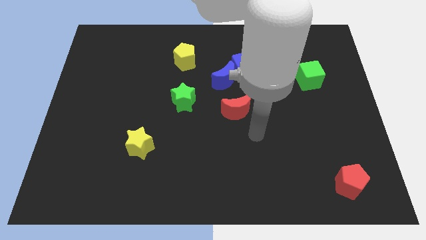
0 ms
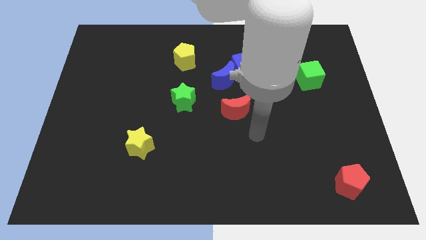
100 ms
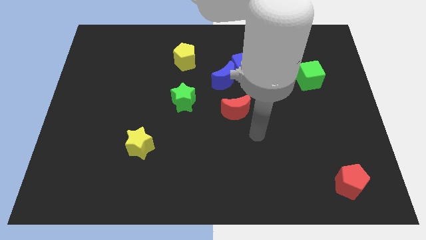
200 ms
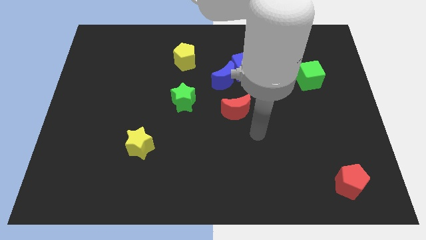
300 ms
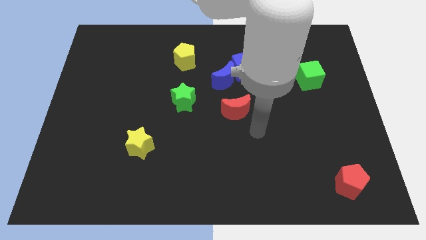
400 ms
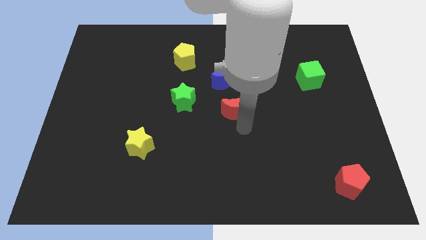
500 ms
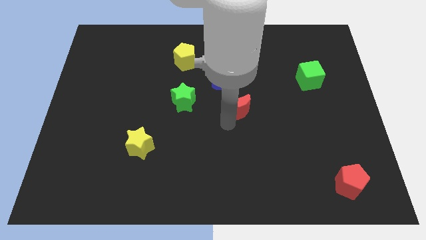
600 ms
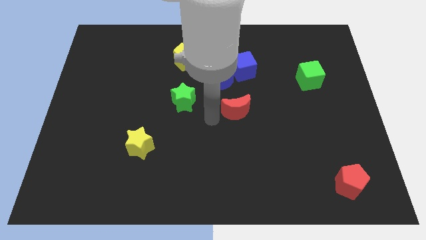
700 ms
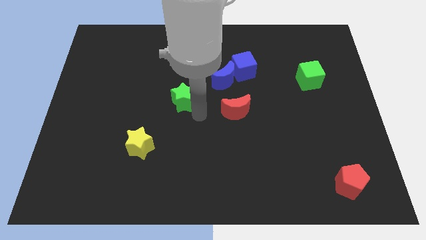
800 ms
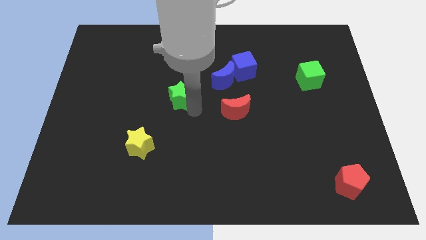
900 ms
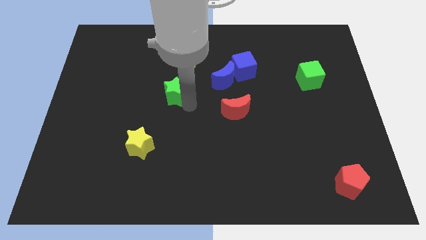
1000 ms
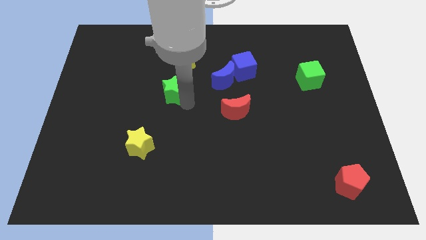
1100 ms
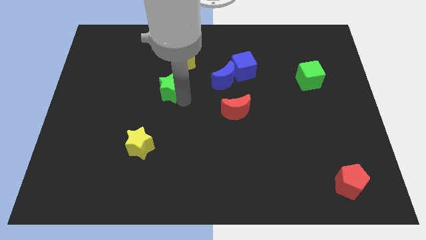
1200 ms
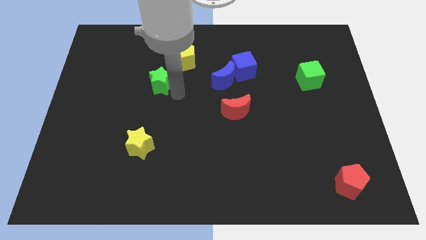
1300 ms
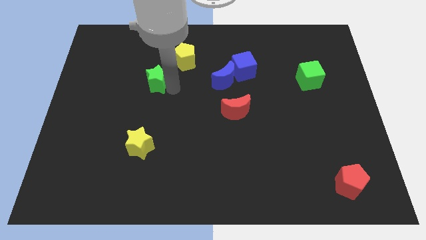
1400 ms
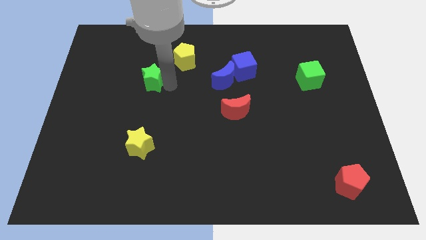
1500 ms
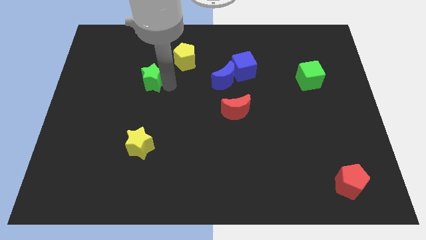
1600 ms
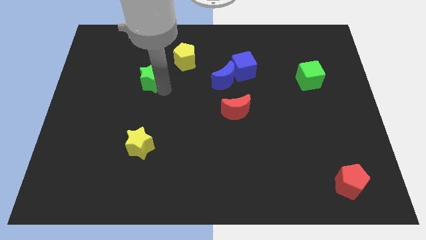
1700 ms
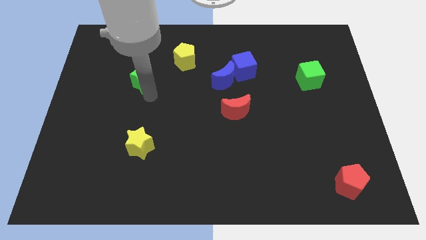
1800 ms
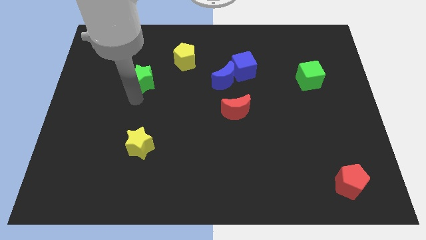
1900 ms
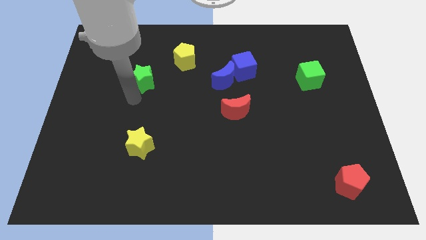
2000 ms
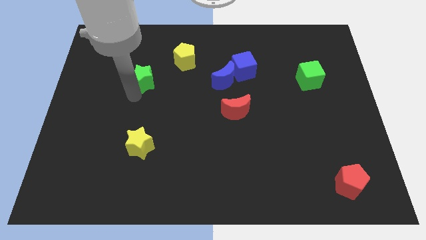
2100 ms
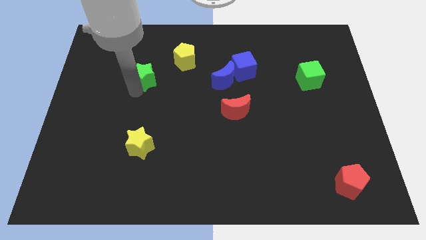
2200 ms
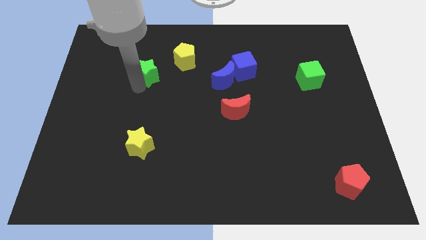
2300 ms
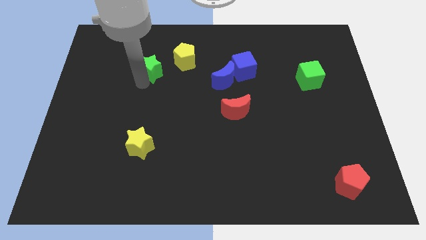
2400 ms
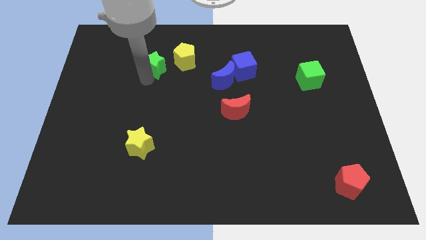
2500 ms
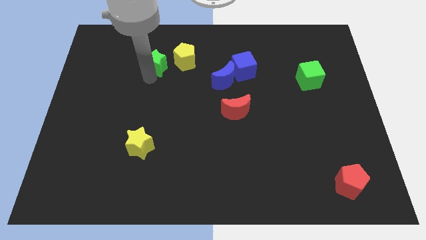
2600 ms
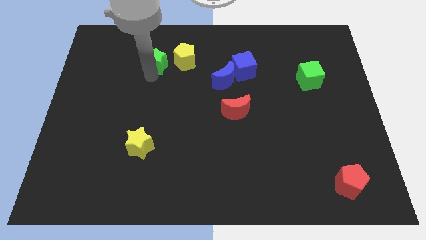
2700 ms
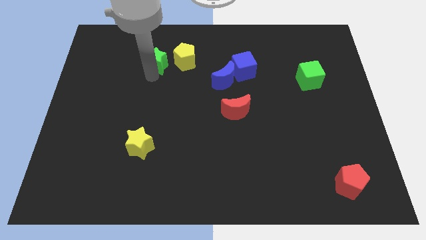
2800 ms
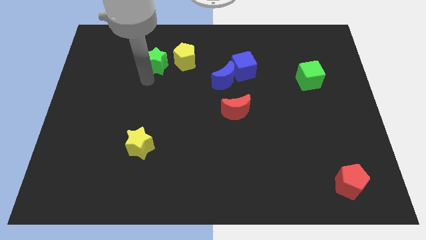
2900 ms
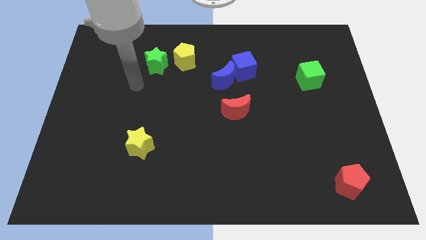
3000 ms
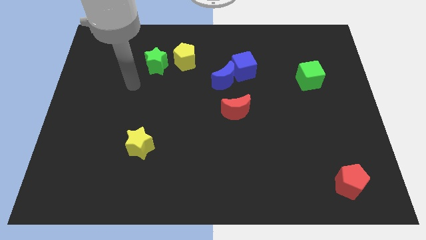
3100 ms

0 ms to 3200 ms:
move the green star to the left of the yellow pentagon

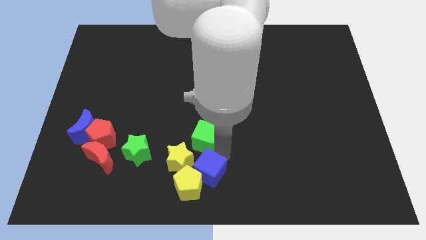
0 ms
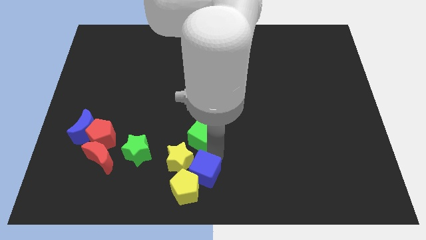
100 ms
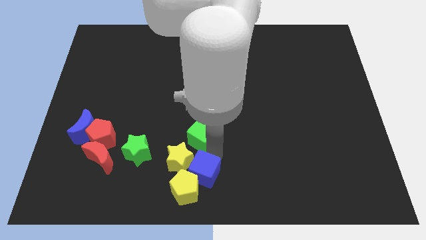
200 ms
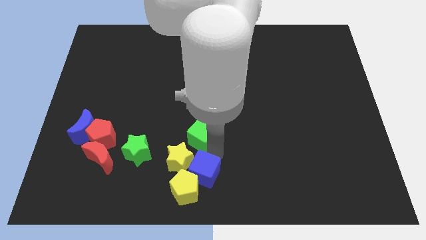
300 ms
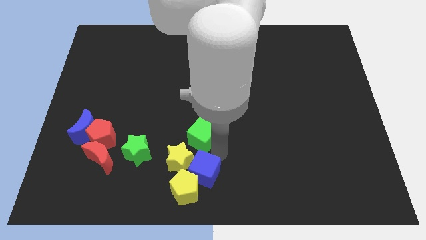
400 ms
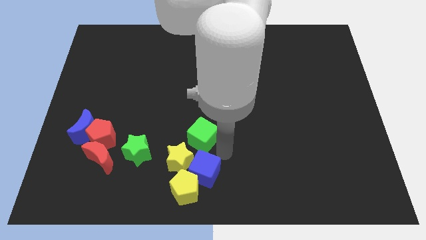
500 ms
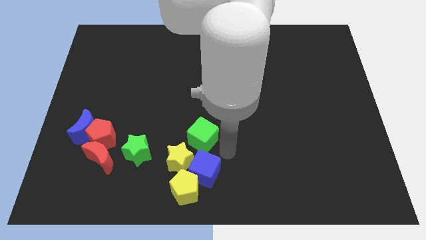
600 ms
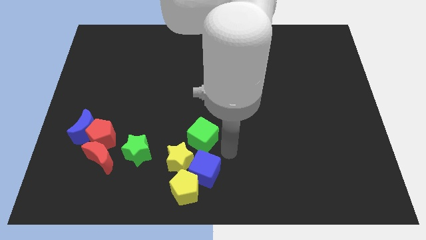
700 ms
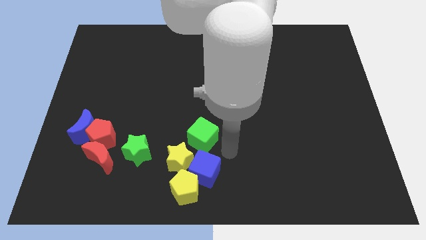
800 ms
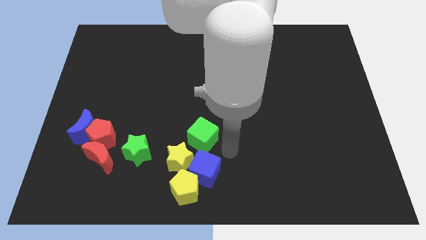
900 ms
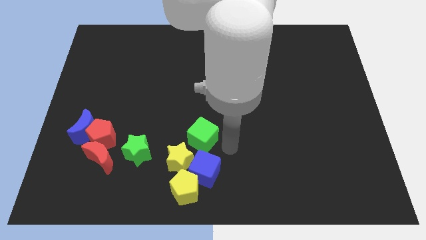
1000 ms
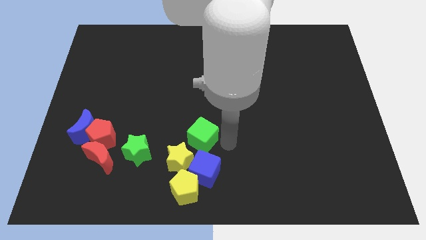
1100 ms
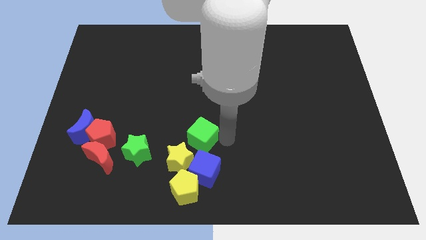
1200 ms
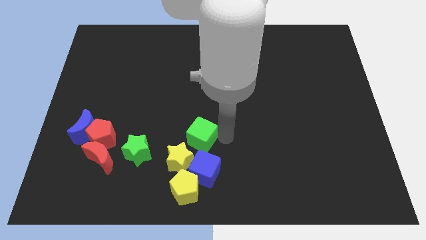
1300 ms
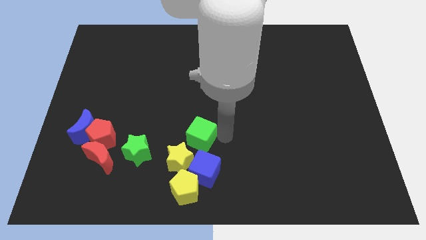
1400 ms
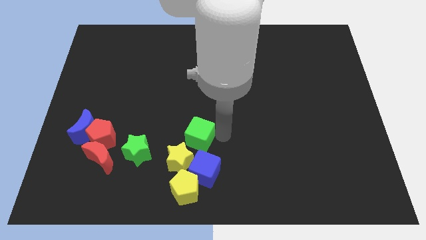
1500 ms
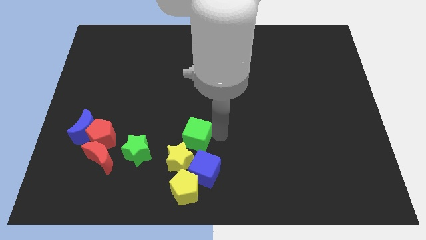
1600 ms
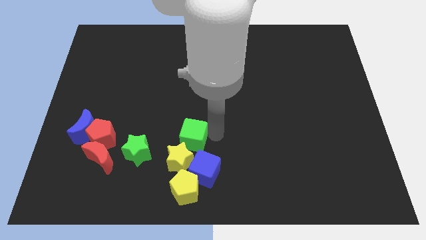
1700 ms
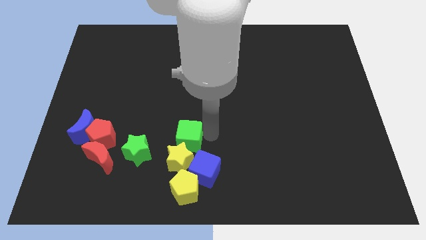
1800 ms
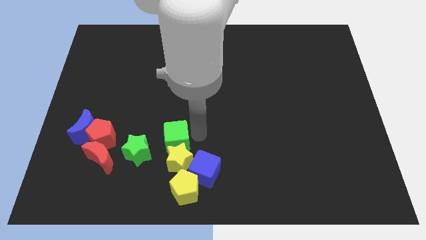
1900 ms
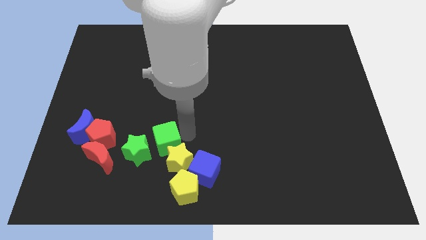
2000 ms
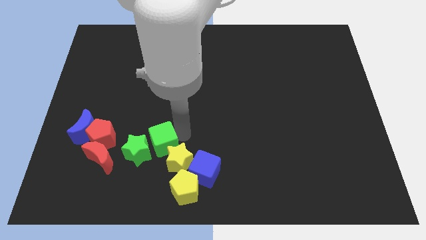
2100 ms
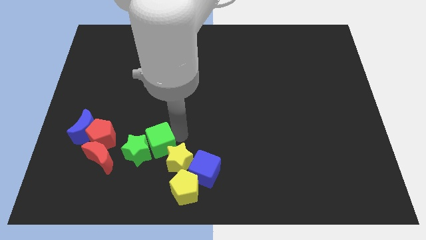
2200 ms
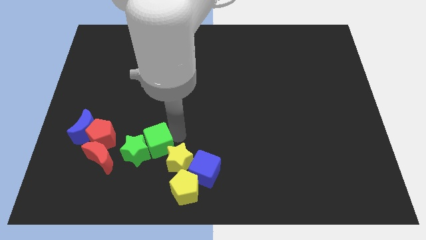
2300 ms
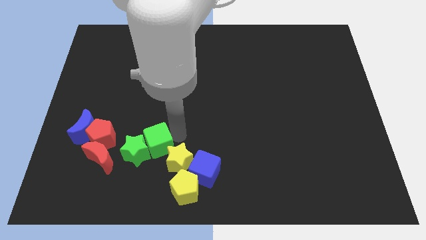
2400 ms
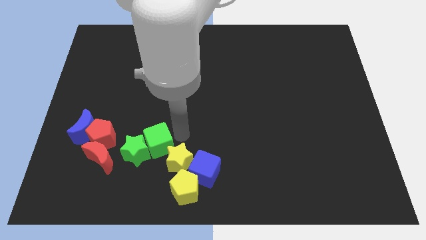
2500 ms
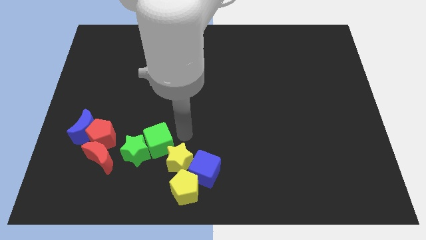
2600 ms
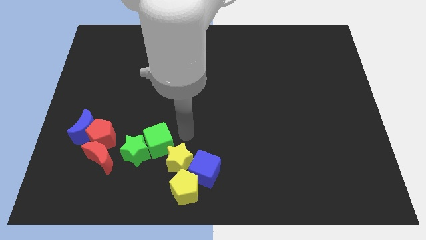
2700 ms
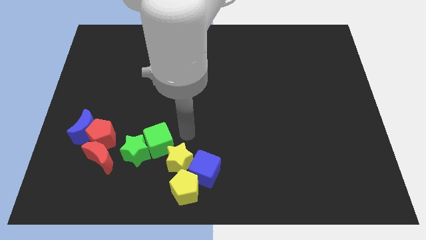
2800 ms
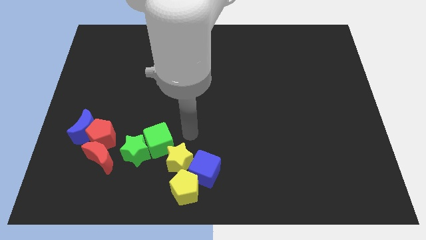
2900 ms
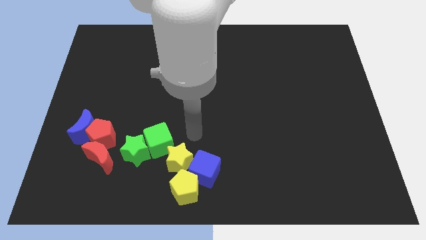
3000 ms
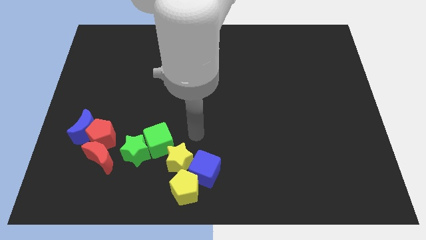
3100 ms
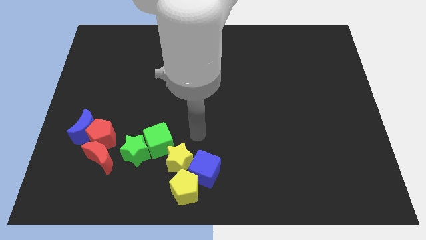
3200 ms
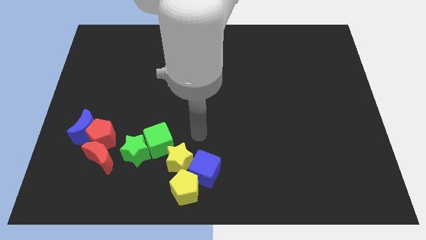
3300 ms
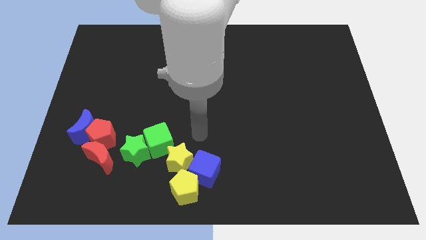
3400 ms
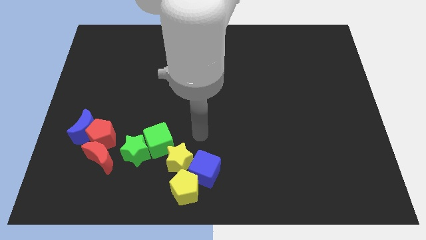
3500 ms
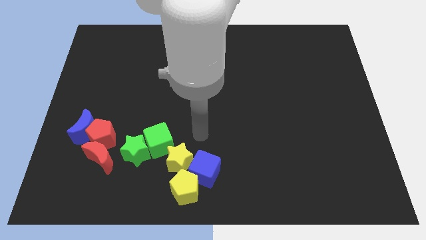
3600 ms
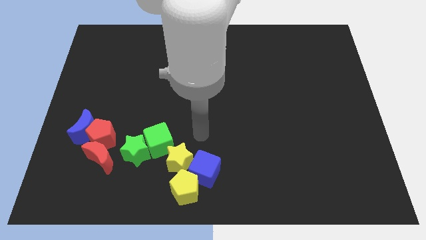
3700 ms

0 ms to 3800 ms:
move the green cube into the green star

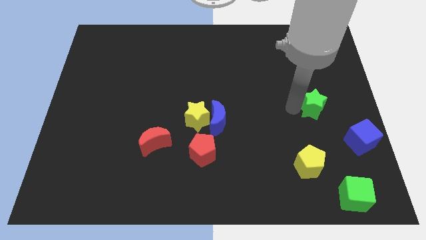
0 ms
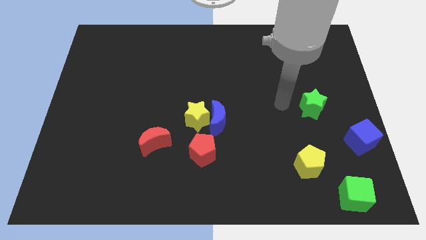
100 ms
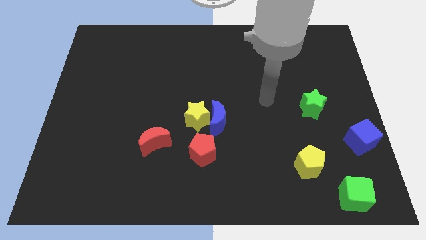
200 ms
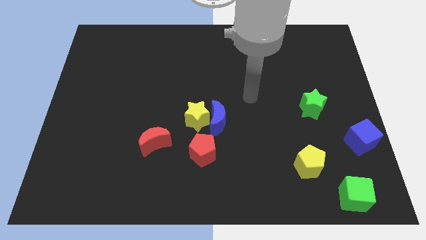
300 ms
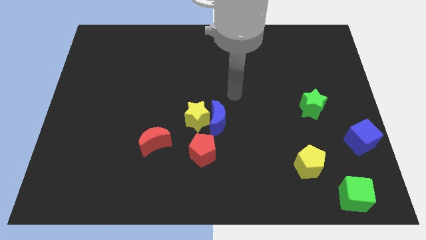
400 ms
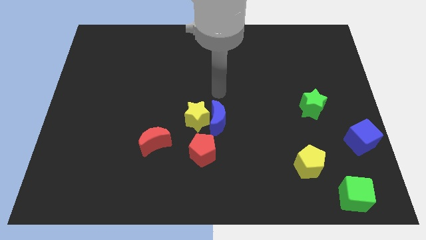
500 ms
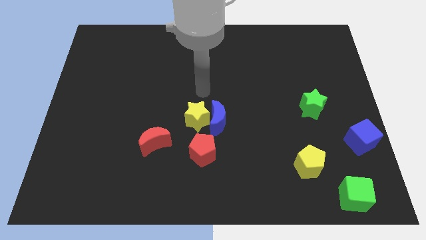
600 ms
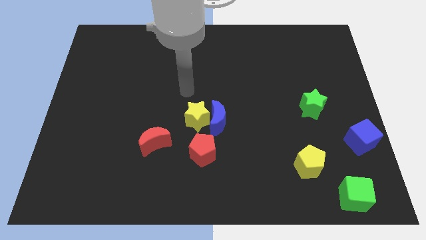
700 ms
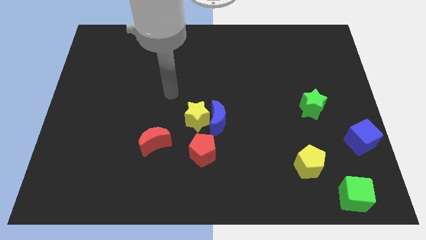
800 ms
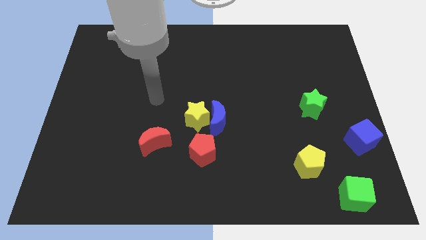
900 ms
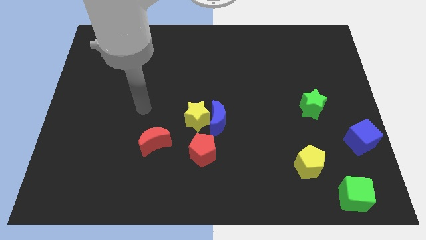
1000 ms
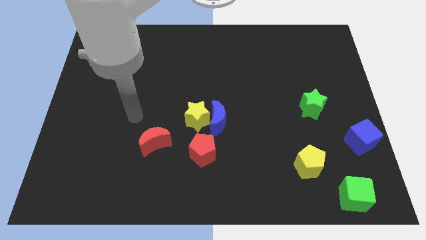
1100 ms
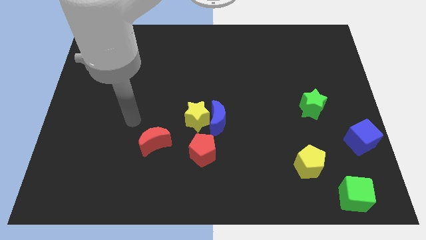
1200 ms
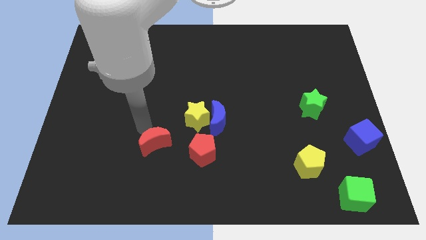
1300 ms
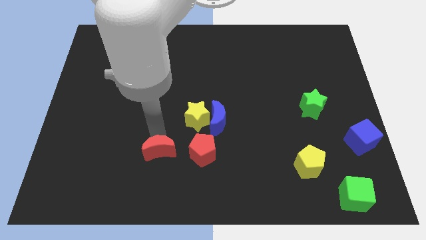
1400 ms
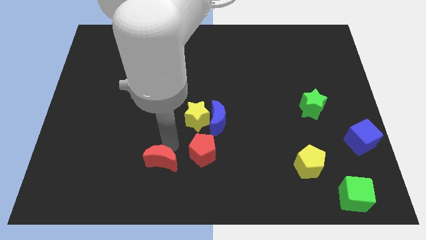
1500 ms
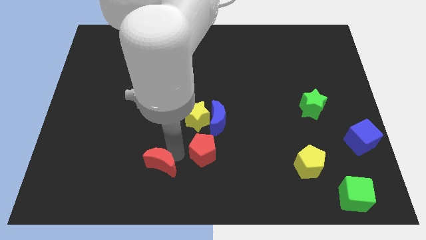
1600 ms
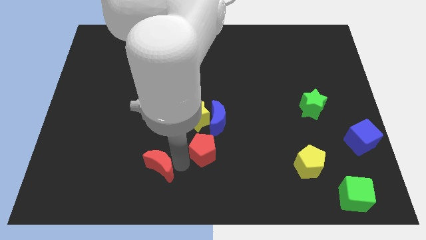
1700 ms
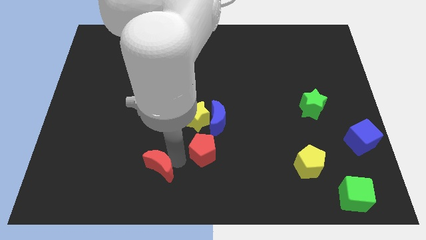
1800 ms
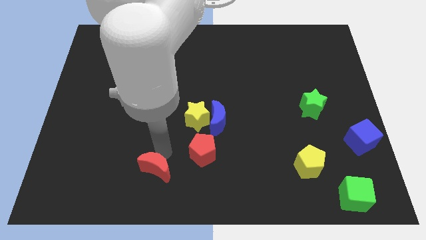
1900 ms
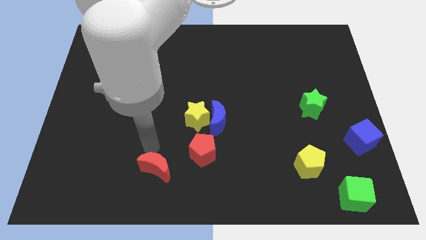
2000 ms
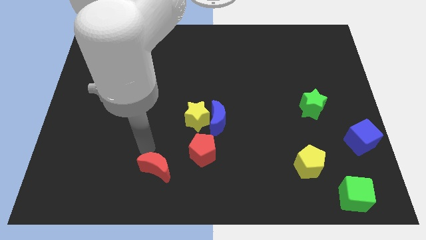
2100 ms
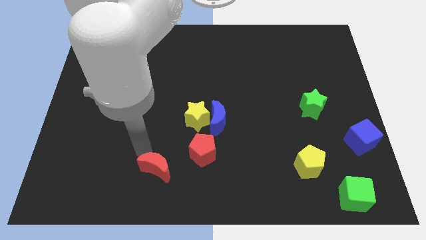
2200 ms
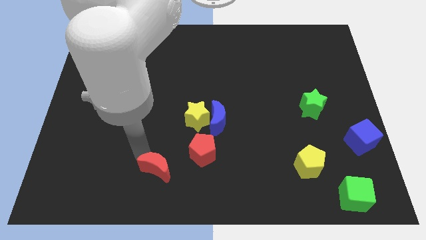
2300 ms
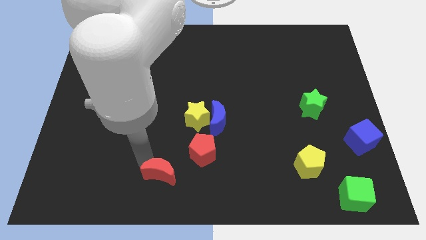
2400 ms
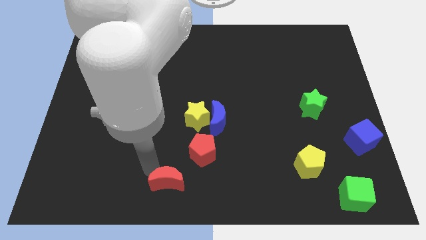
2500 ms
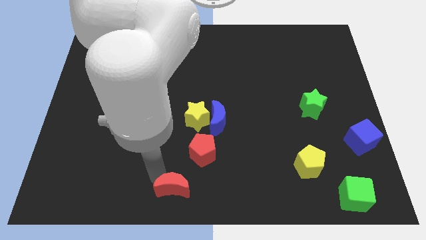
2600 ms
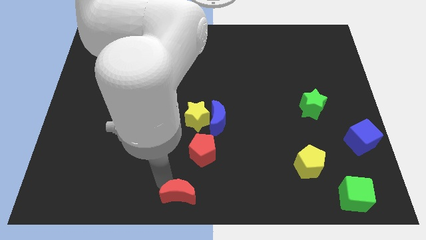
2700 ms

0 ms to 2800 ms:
move the arm away from the green star
